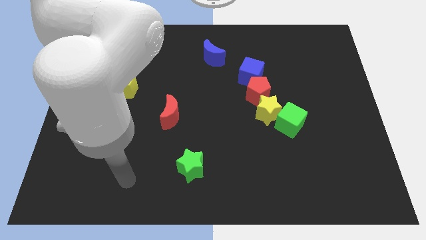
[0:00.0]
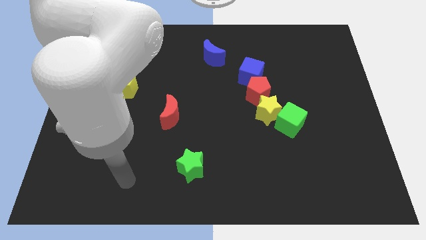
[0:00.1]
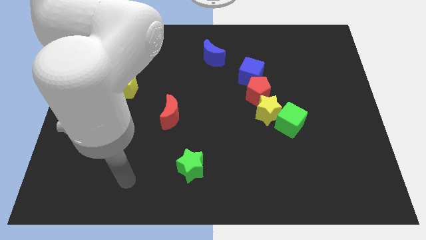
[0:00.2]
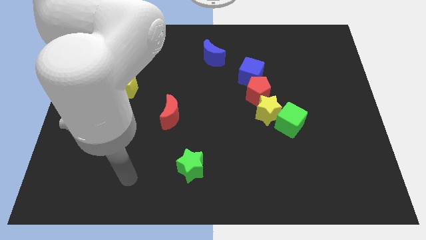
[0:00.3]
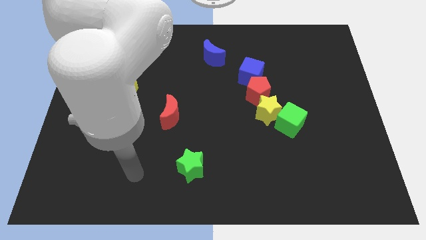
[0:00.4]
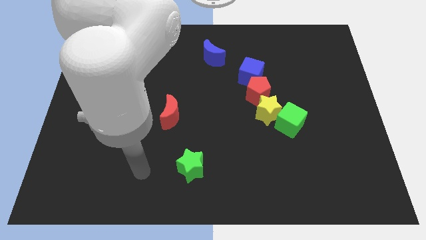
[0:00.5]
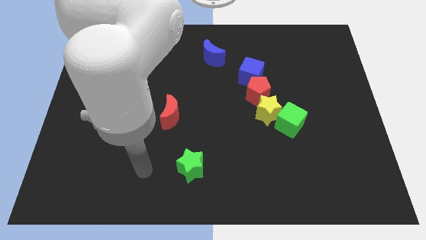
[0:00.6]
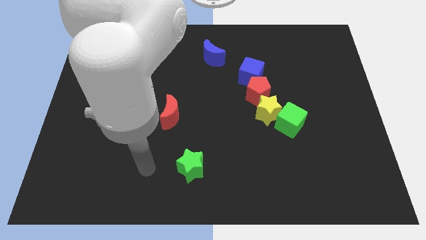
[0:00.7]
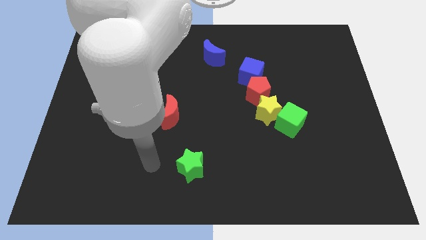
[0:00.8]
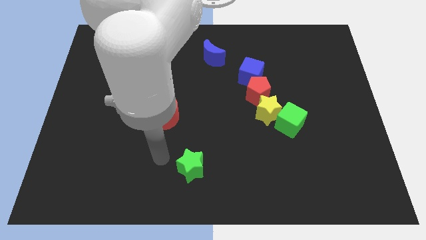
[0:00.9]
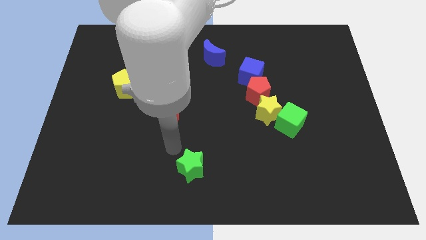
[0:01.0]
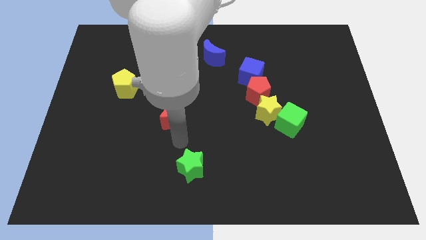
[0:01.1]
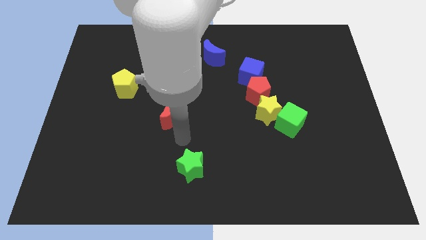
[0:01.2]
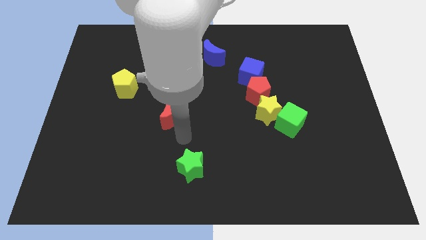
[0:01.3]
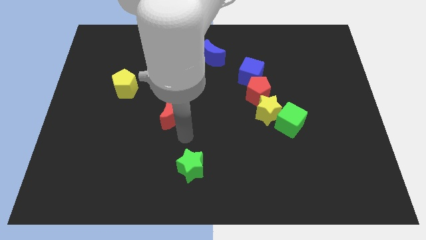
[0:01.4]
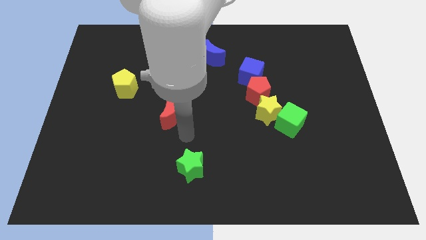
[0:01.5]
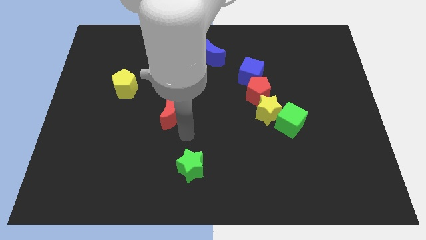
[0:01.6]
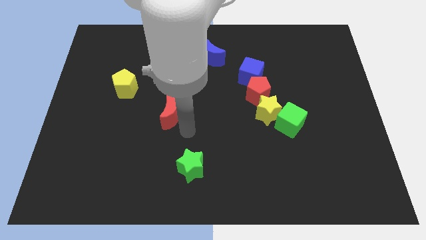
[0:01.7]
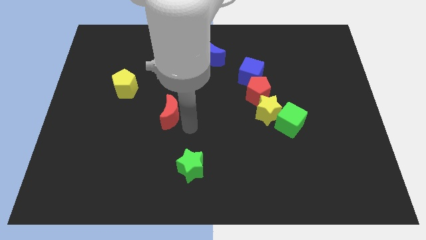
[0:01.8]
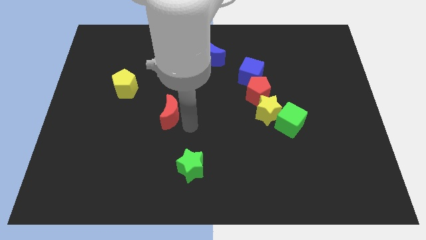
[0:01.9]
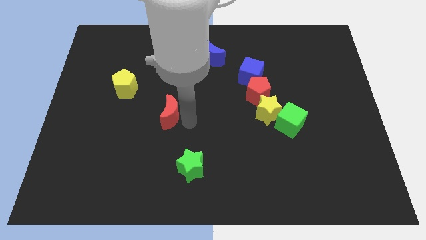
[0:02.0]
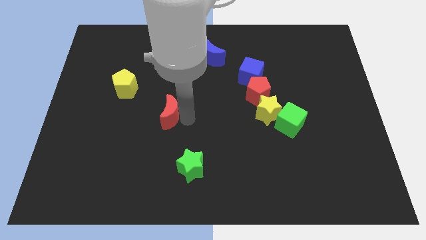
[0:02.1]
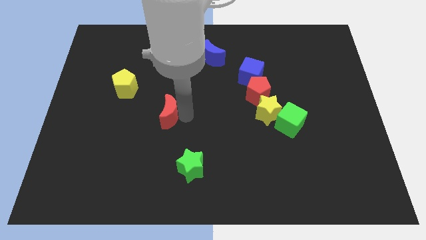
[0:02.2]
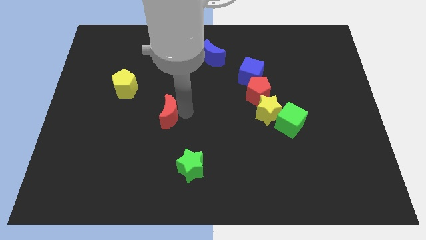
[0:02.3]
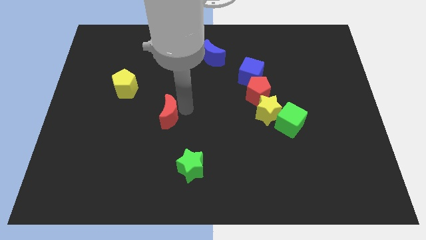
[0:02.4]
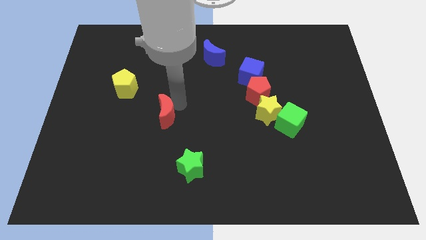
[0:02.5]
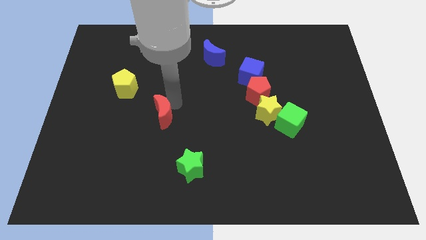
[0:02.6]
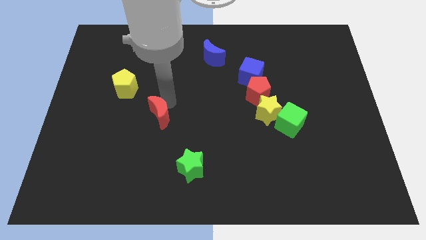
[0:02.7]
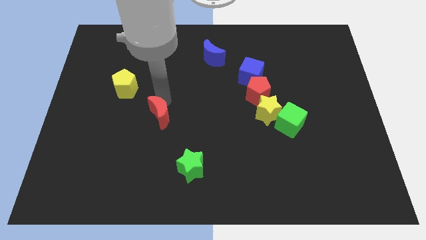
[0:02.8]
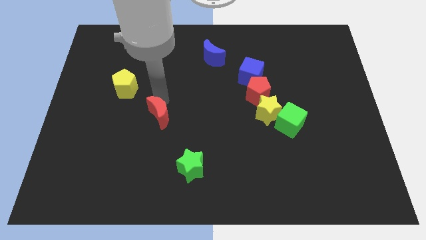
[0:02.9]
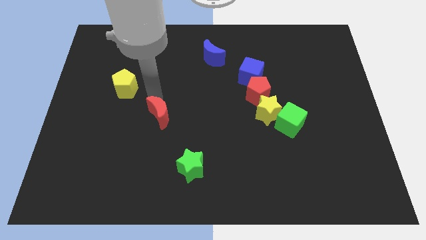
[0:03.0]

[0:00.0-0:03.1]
place arm on the top of red moon

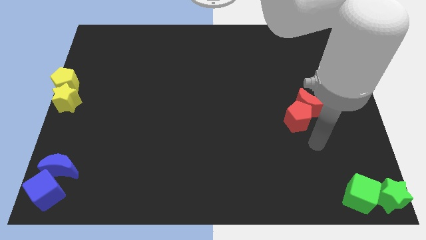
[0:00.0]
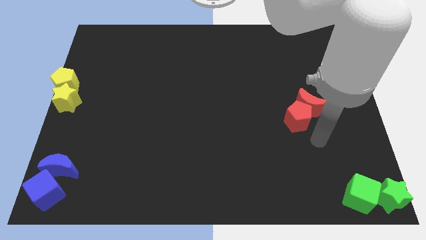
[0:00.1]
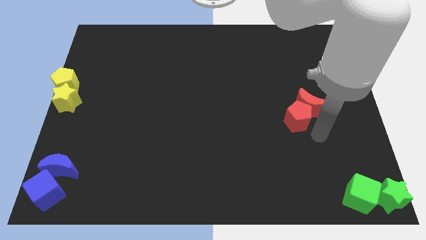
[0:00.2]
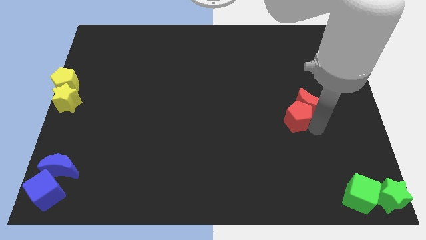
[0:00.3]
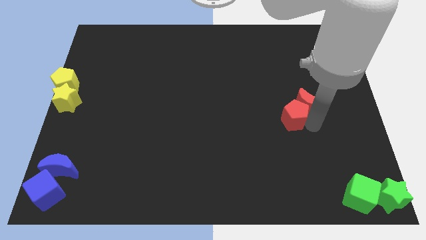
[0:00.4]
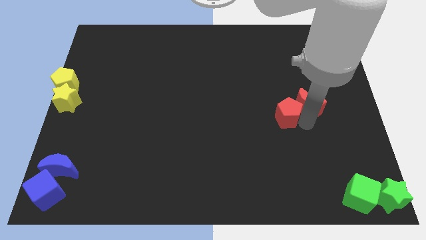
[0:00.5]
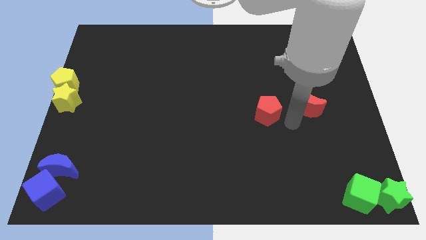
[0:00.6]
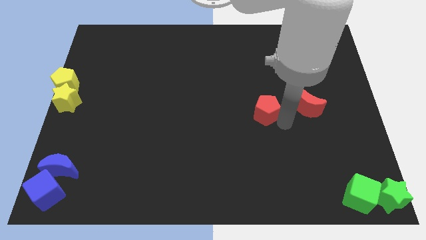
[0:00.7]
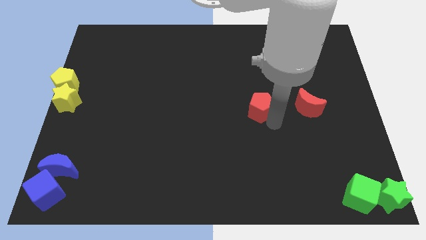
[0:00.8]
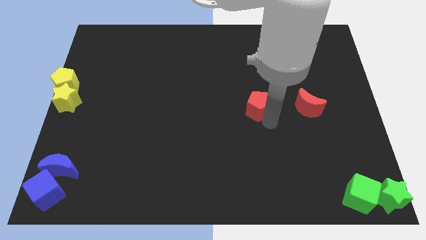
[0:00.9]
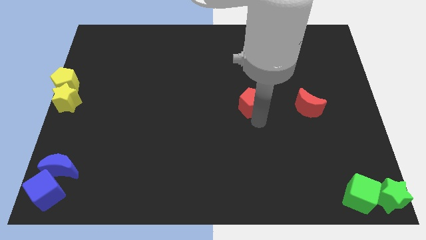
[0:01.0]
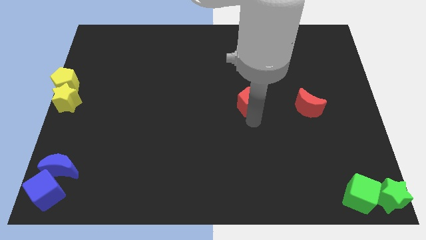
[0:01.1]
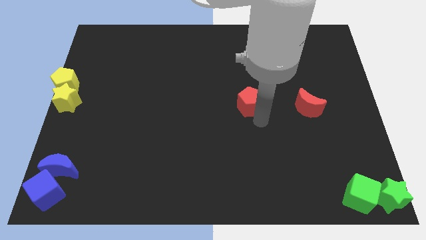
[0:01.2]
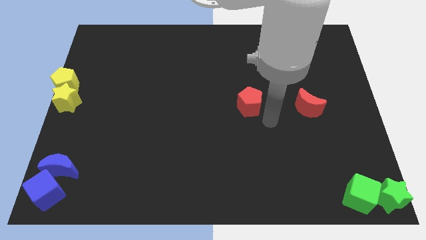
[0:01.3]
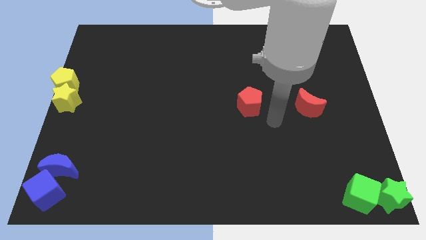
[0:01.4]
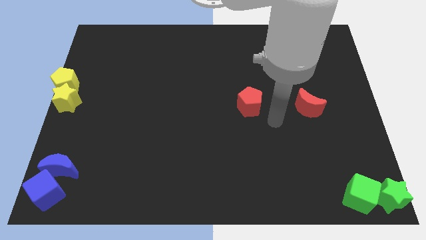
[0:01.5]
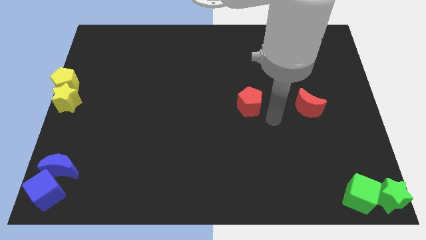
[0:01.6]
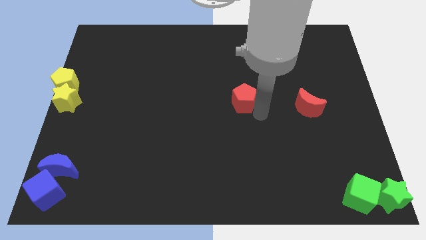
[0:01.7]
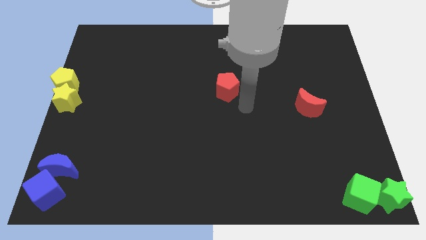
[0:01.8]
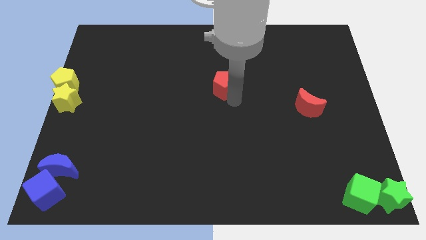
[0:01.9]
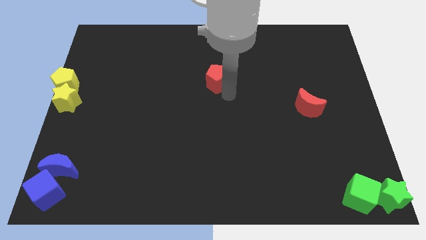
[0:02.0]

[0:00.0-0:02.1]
push the red pentagon away from the red crescent

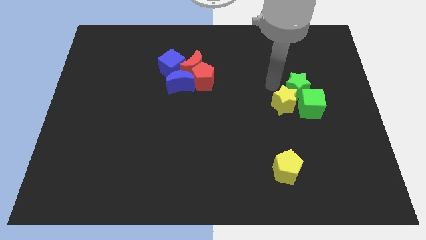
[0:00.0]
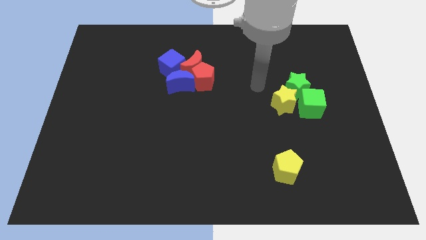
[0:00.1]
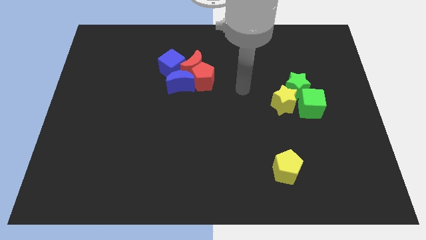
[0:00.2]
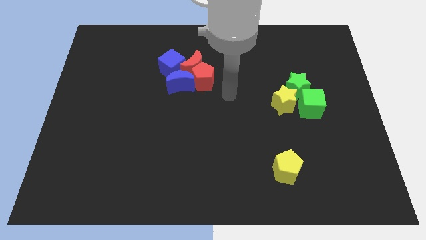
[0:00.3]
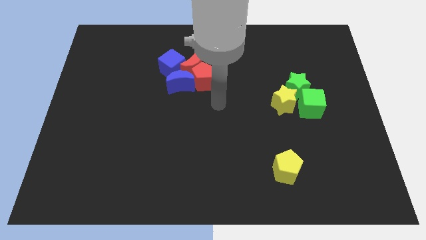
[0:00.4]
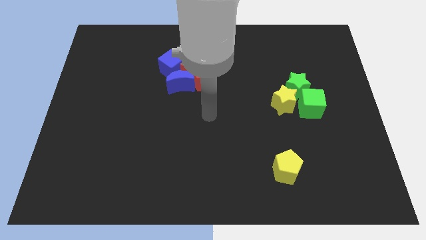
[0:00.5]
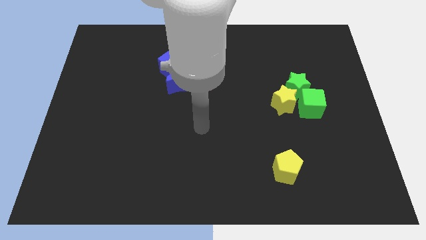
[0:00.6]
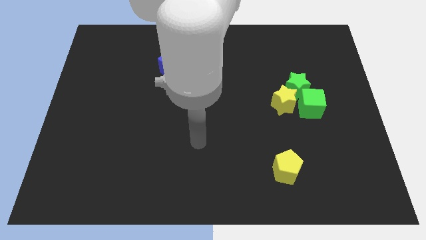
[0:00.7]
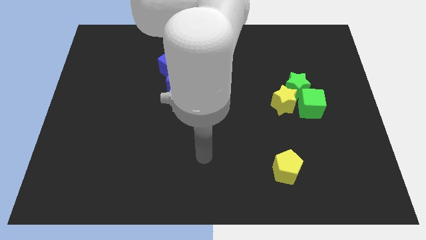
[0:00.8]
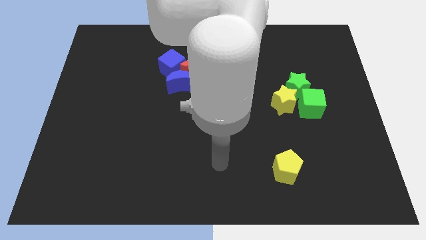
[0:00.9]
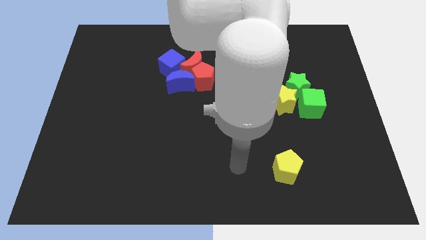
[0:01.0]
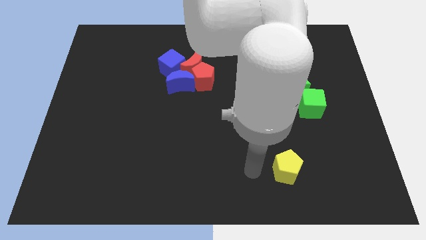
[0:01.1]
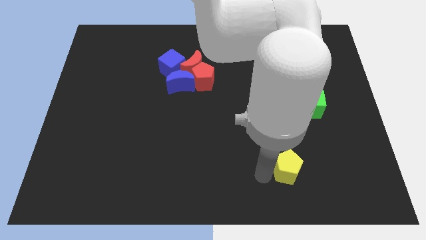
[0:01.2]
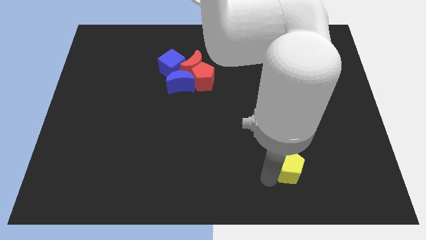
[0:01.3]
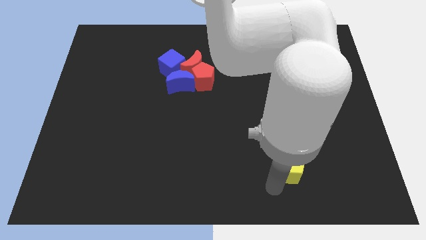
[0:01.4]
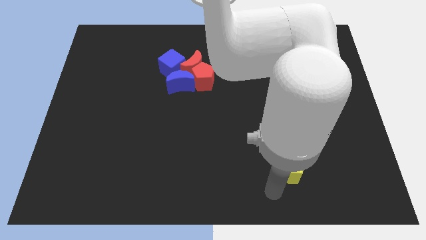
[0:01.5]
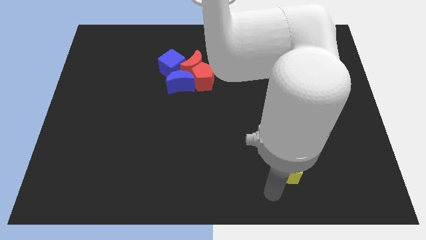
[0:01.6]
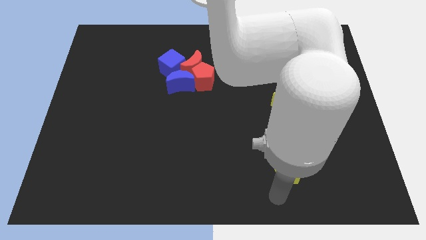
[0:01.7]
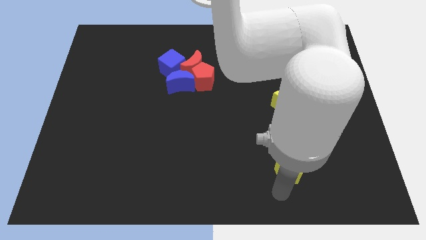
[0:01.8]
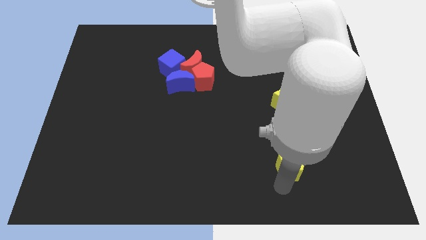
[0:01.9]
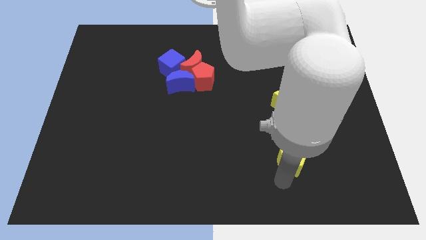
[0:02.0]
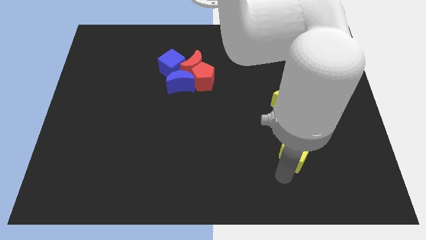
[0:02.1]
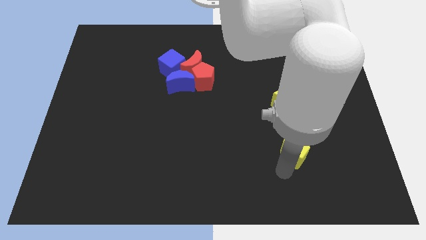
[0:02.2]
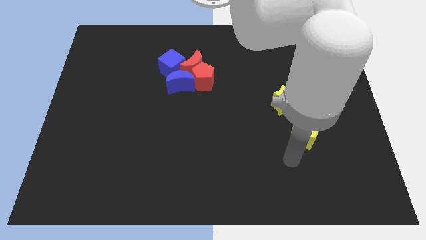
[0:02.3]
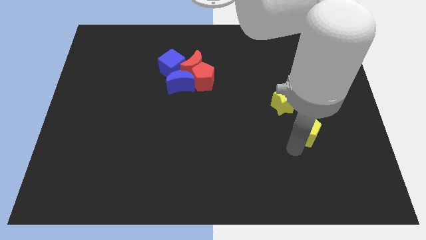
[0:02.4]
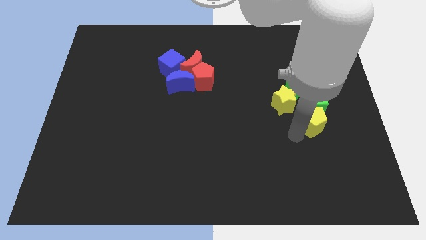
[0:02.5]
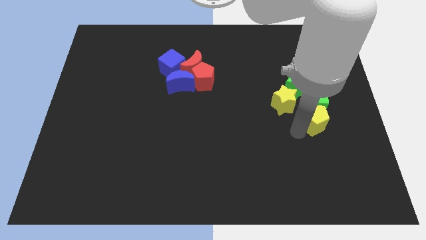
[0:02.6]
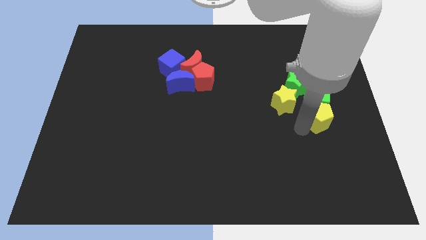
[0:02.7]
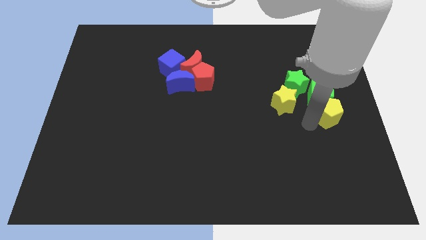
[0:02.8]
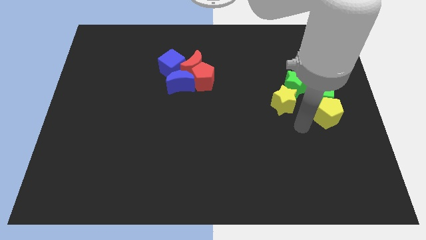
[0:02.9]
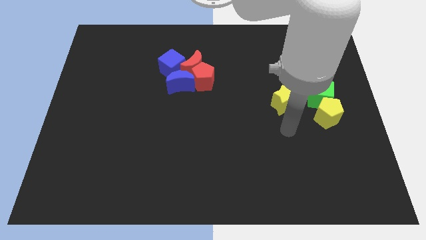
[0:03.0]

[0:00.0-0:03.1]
move the yellow pentagon into the bottom side of the green cube

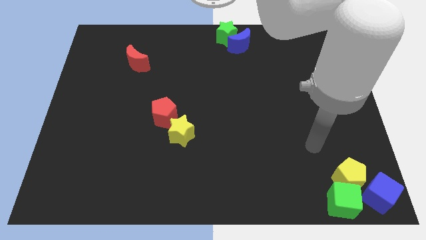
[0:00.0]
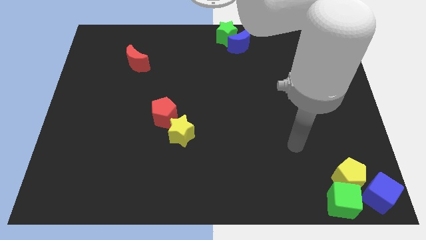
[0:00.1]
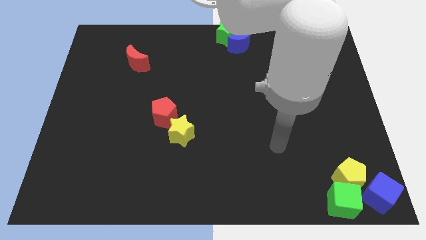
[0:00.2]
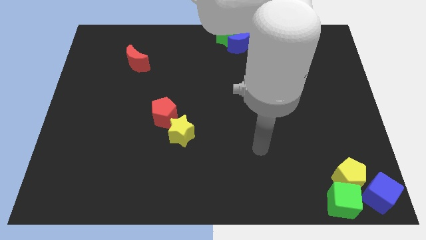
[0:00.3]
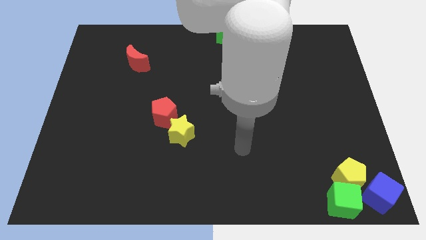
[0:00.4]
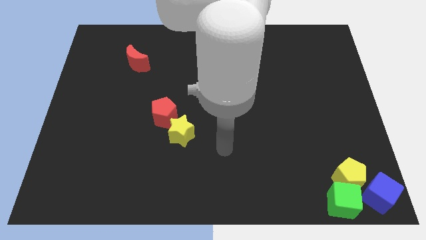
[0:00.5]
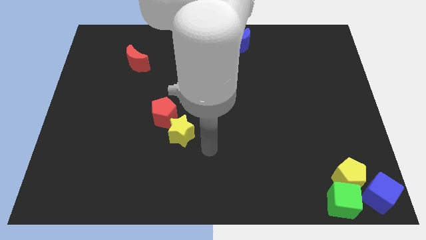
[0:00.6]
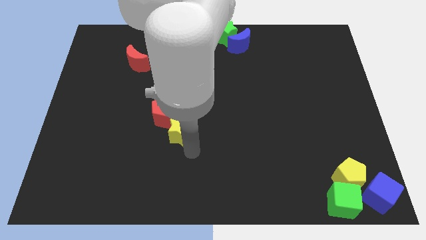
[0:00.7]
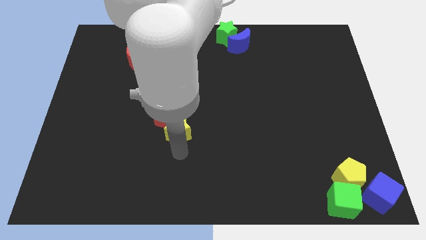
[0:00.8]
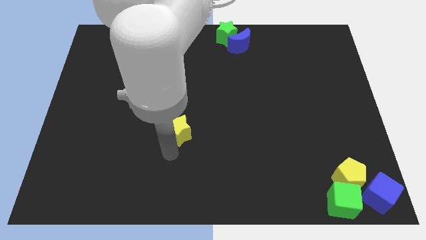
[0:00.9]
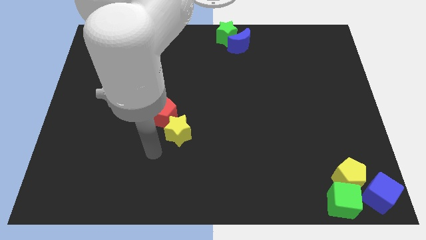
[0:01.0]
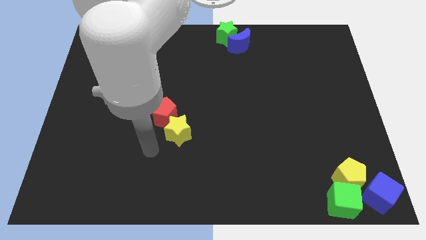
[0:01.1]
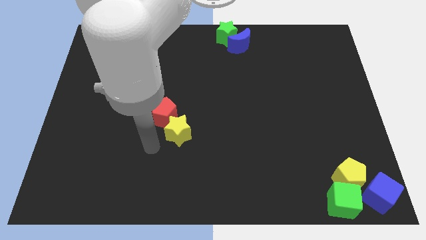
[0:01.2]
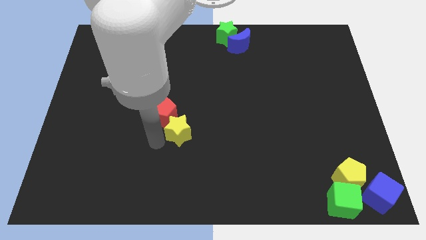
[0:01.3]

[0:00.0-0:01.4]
move the arm to the yellow star
